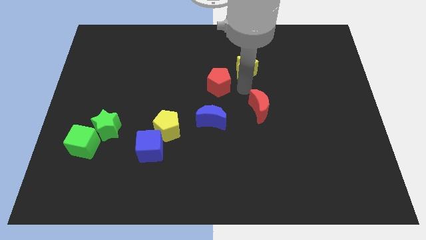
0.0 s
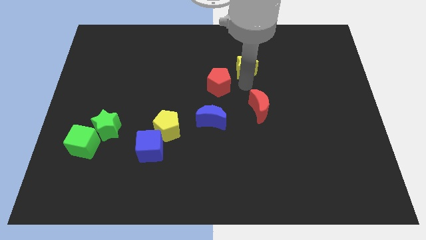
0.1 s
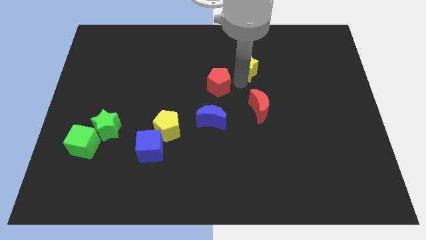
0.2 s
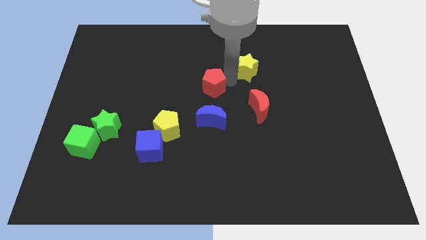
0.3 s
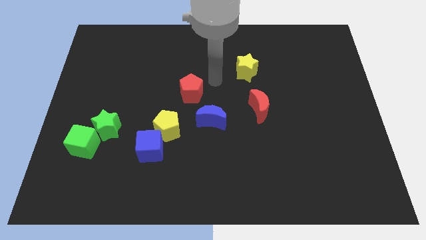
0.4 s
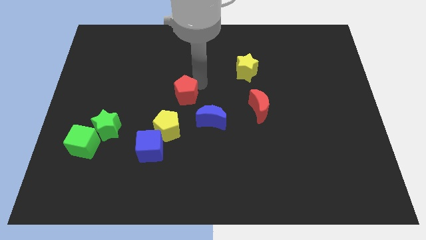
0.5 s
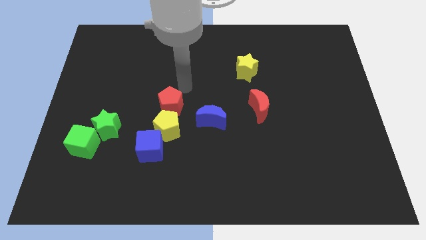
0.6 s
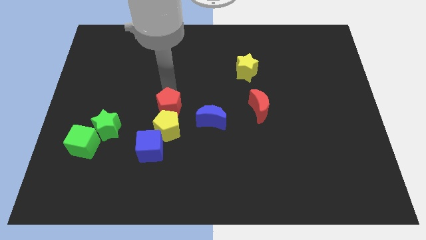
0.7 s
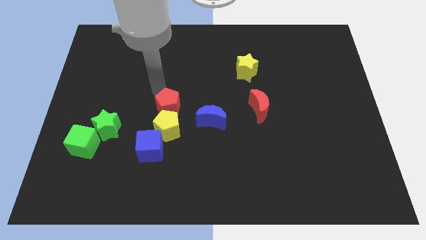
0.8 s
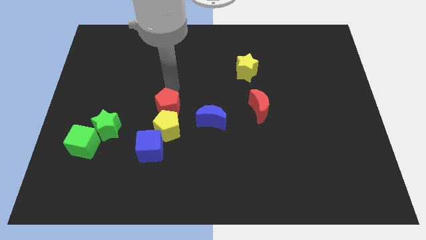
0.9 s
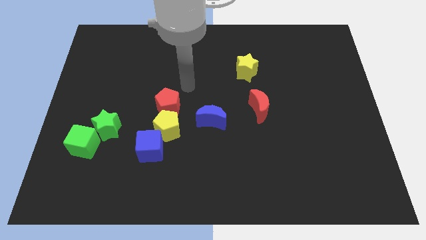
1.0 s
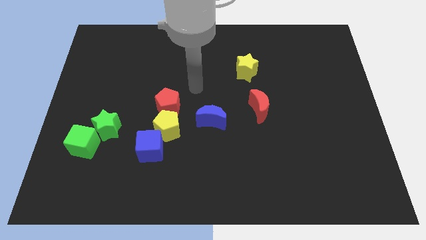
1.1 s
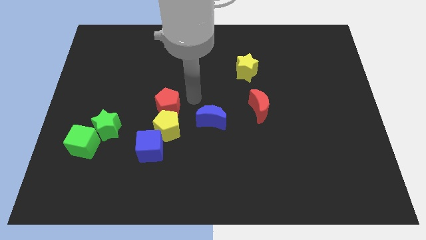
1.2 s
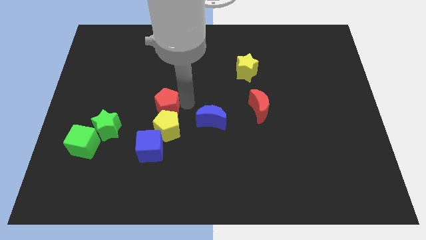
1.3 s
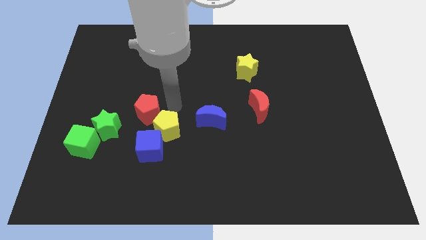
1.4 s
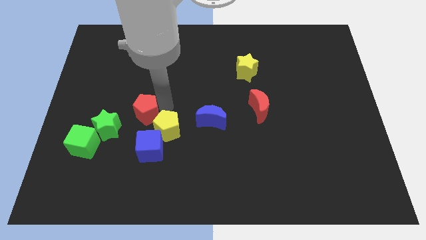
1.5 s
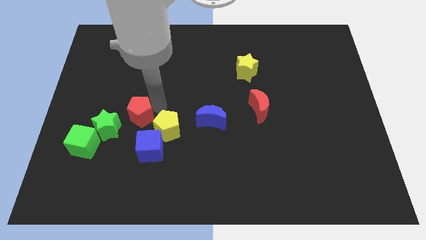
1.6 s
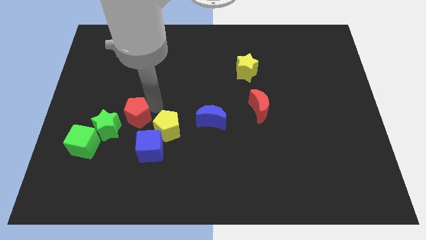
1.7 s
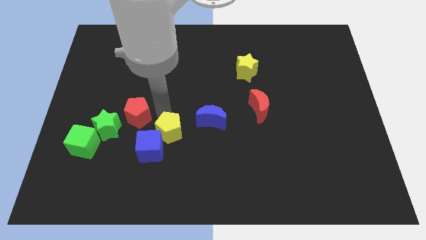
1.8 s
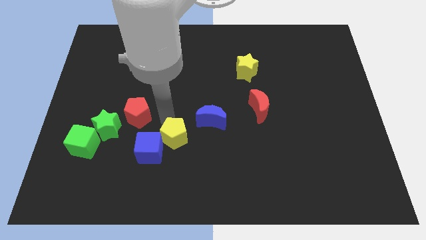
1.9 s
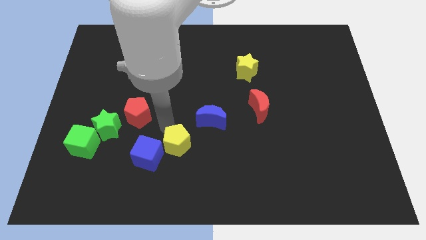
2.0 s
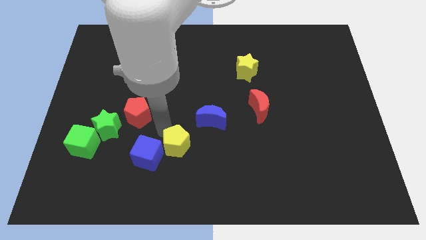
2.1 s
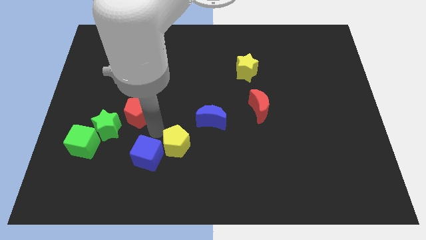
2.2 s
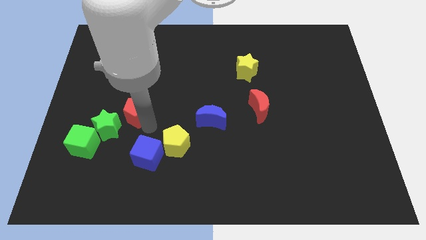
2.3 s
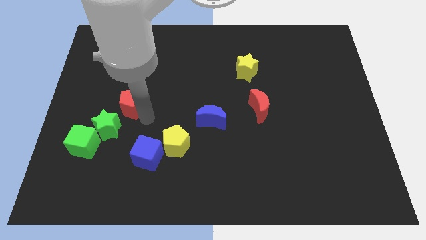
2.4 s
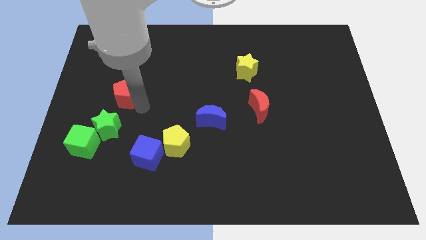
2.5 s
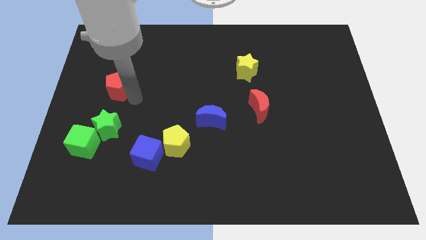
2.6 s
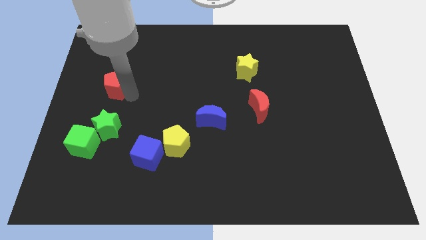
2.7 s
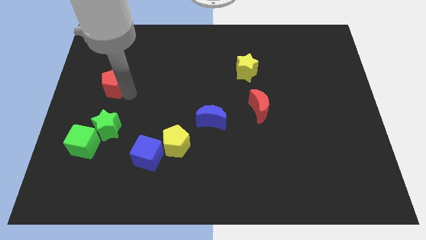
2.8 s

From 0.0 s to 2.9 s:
place the red pentagon above the green star

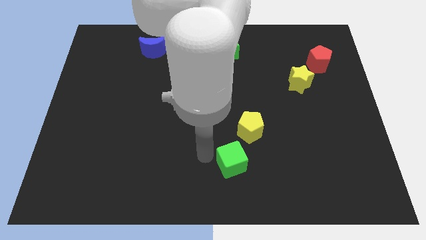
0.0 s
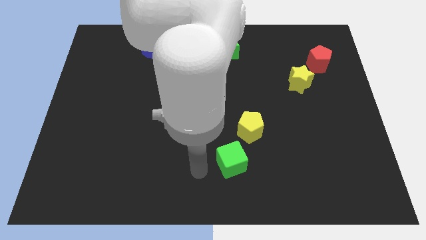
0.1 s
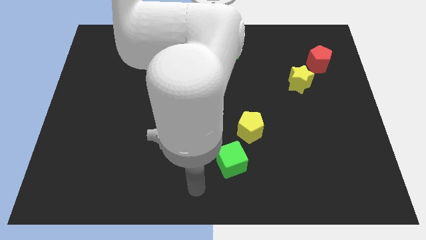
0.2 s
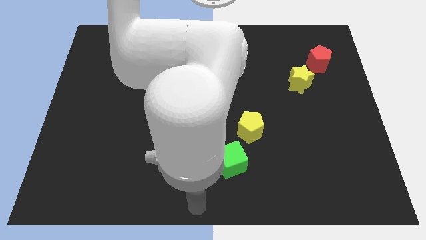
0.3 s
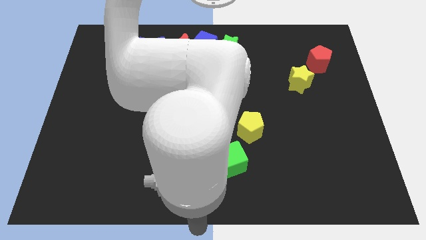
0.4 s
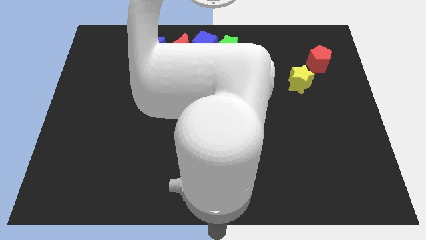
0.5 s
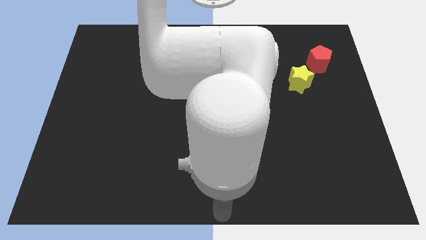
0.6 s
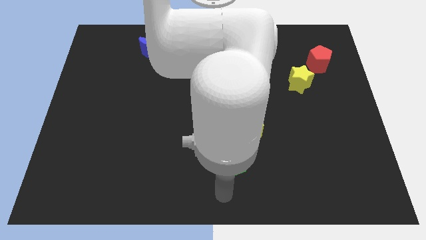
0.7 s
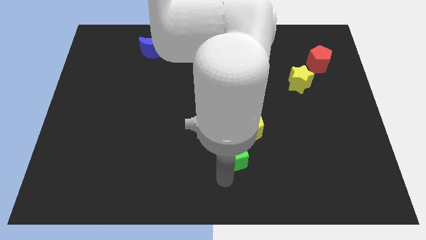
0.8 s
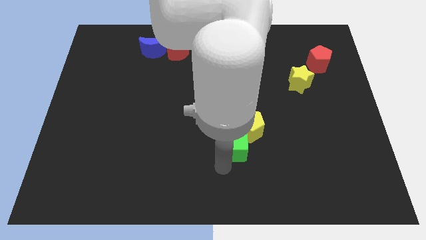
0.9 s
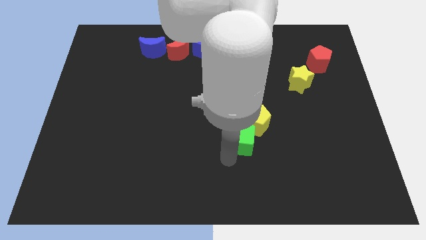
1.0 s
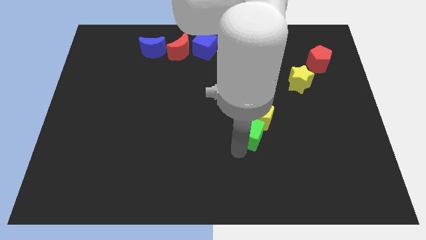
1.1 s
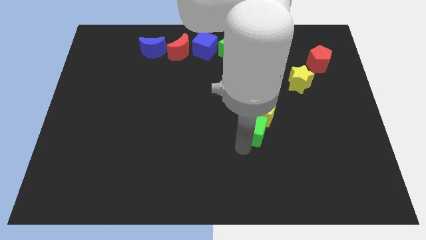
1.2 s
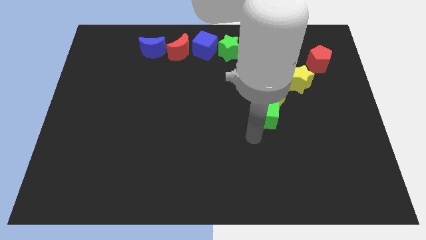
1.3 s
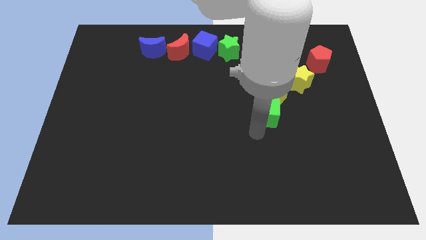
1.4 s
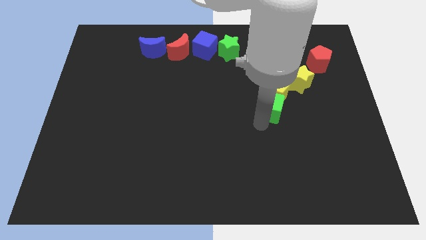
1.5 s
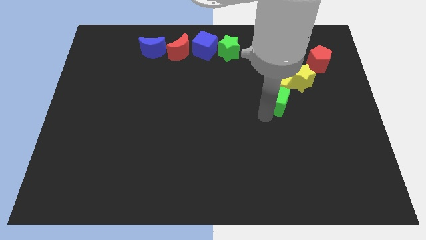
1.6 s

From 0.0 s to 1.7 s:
push the green cube towards the yellow pentagon

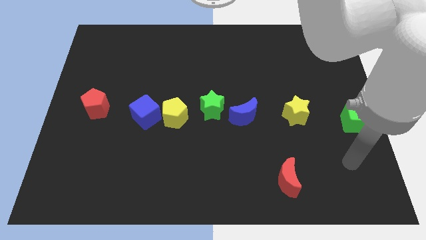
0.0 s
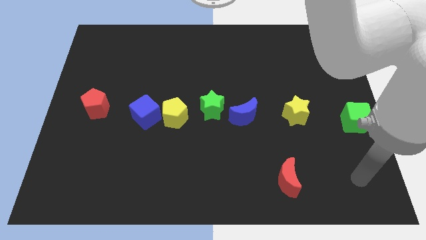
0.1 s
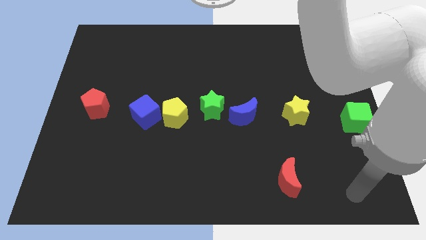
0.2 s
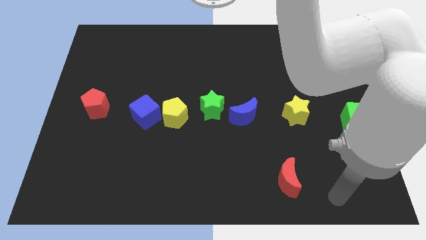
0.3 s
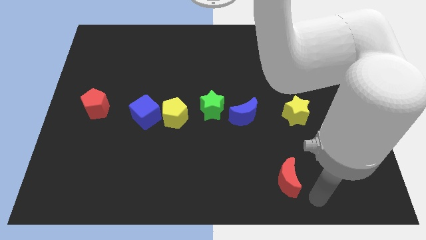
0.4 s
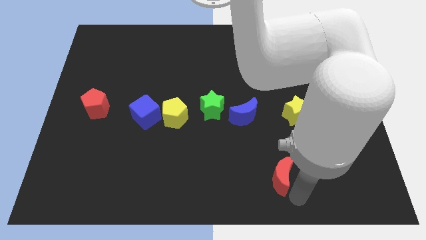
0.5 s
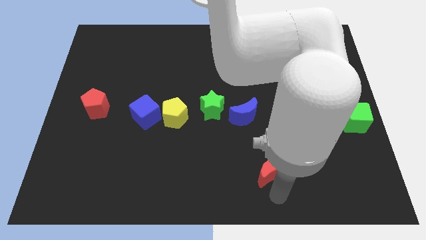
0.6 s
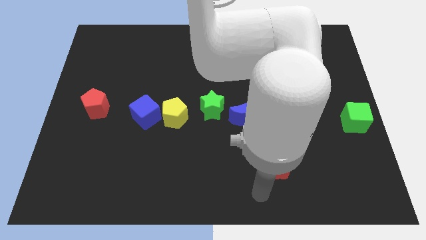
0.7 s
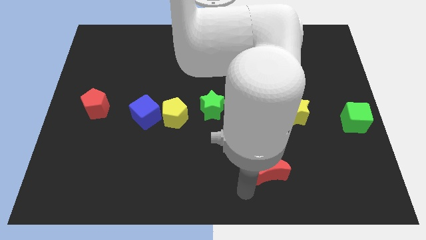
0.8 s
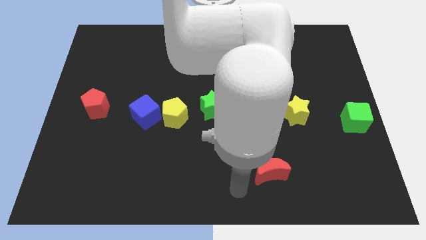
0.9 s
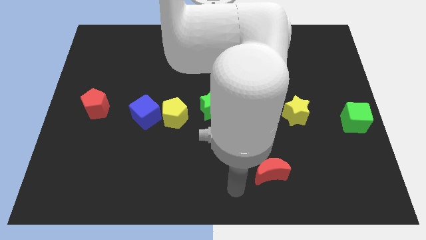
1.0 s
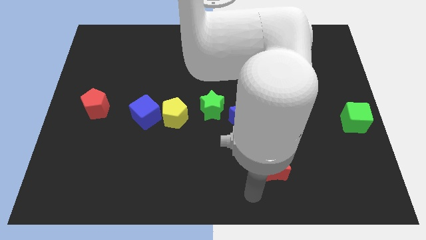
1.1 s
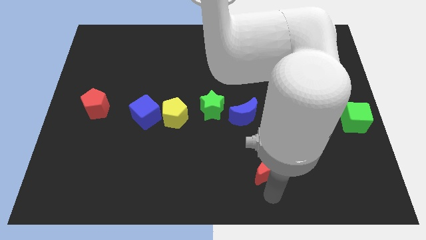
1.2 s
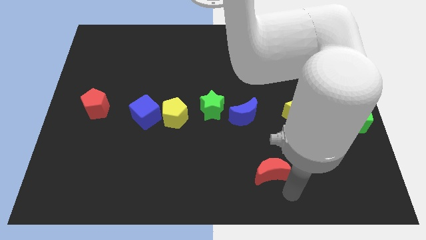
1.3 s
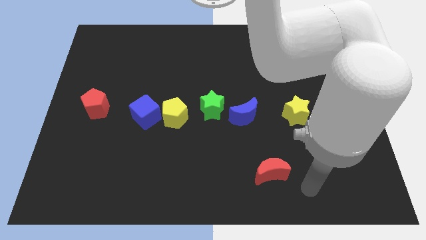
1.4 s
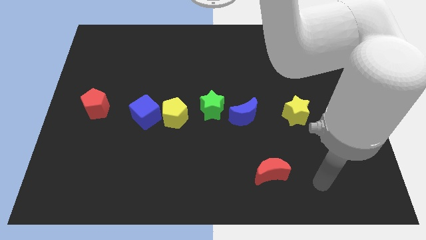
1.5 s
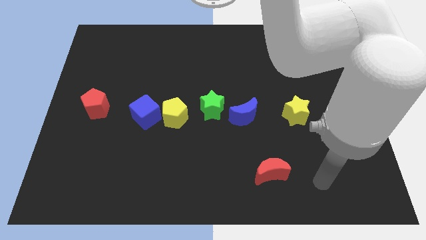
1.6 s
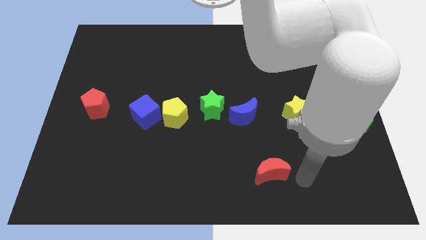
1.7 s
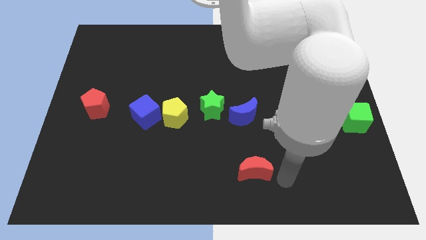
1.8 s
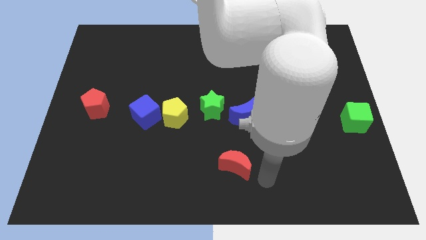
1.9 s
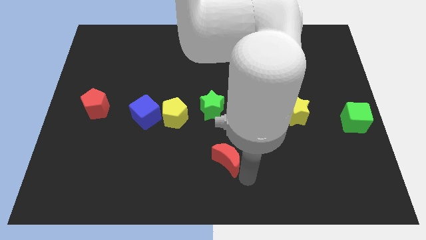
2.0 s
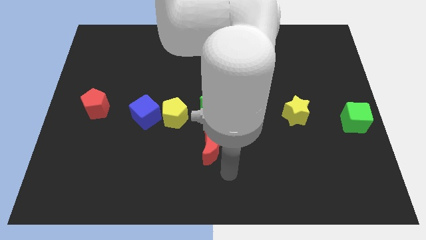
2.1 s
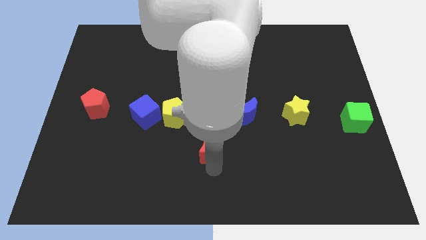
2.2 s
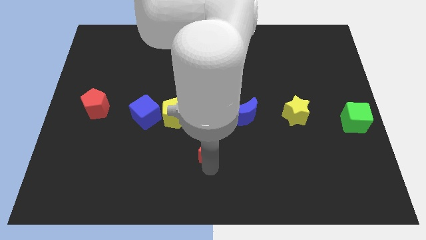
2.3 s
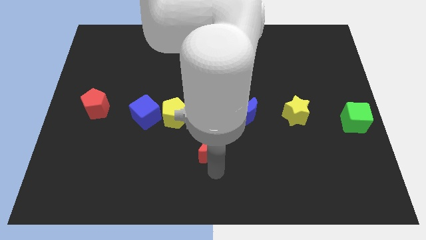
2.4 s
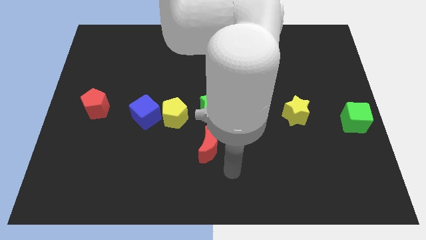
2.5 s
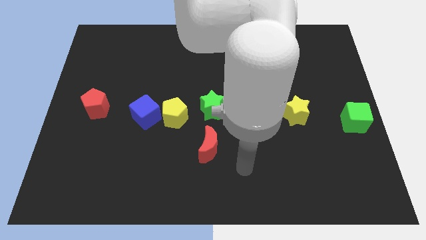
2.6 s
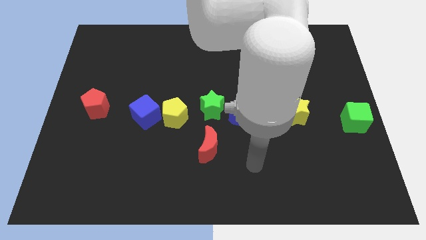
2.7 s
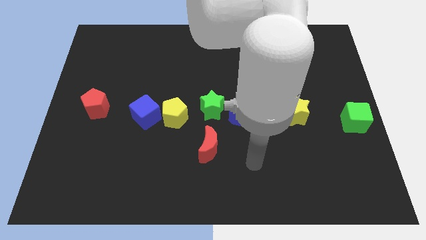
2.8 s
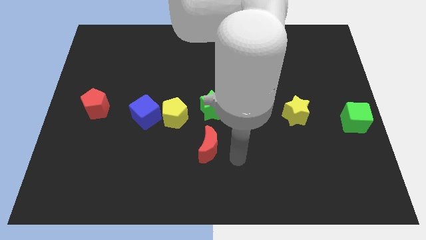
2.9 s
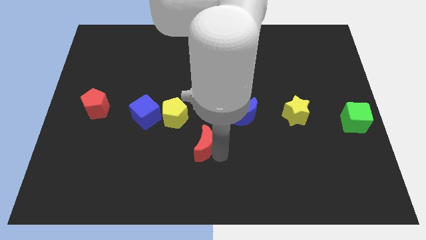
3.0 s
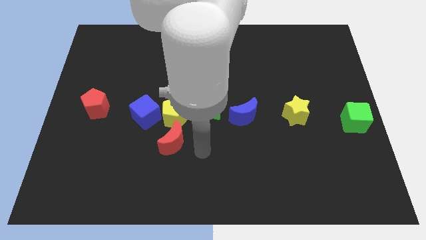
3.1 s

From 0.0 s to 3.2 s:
push the red crescent to the bottom side of the yellow pentagon

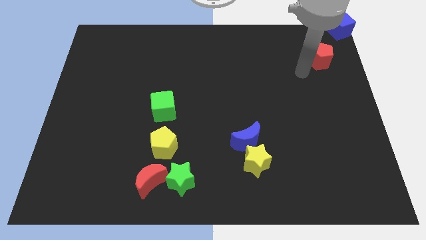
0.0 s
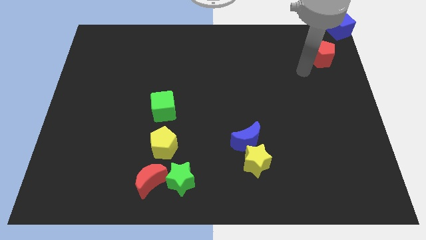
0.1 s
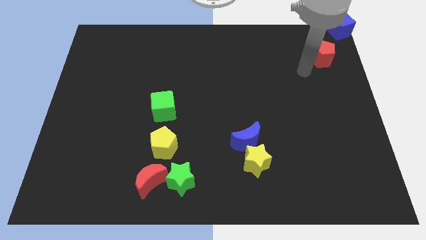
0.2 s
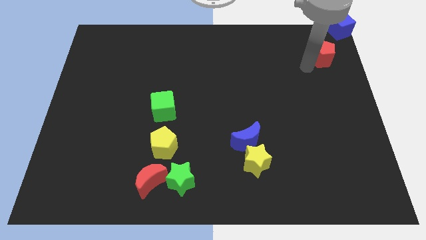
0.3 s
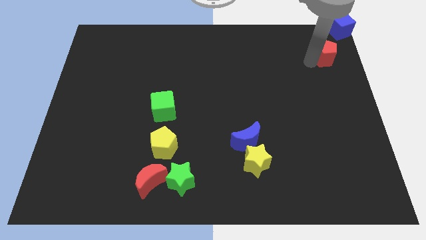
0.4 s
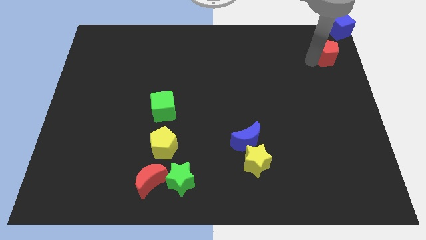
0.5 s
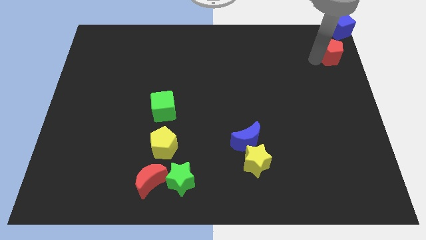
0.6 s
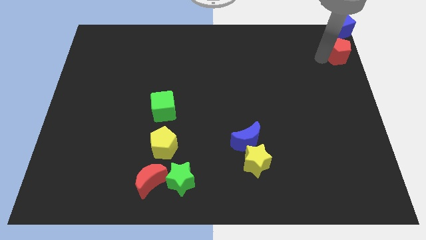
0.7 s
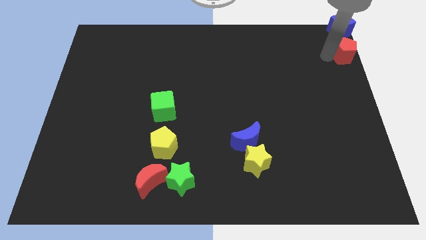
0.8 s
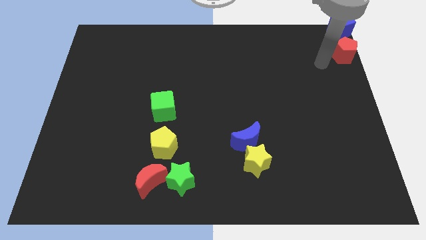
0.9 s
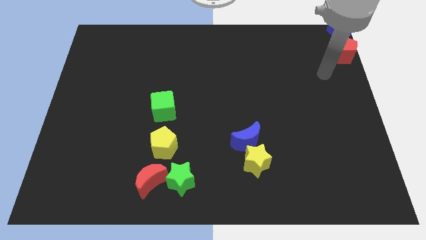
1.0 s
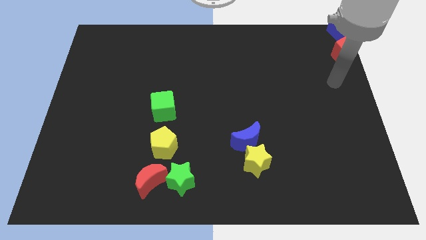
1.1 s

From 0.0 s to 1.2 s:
place the red pentagon below the blue cube
